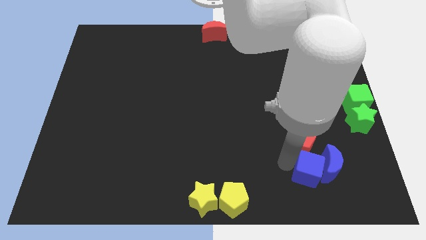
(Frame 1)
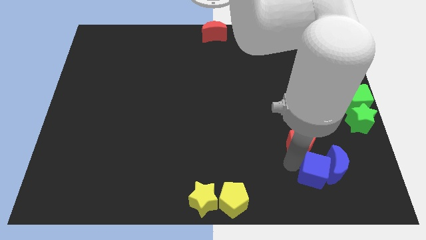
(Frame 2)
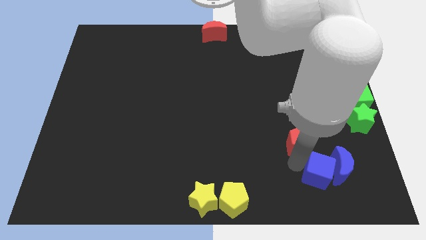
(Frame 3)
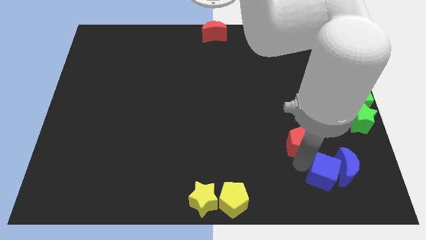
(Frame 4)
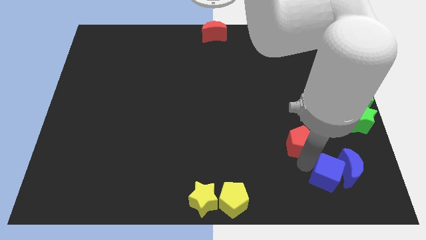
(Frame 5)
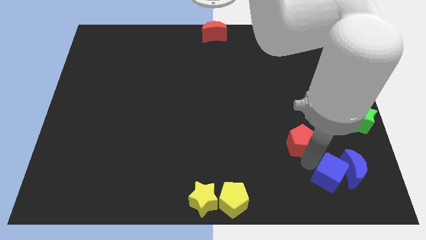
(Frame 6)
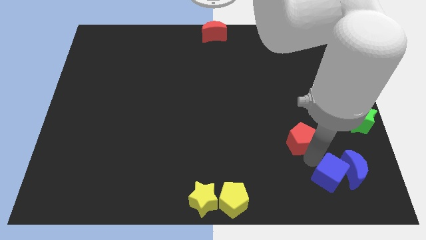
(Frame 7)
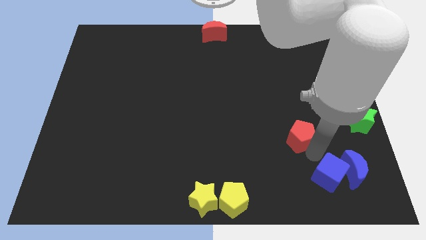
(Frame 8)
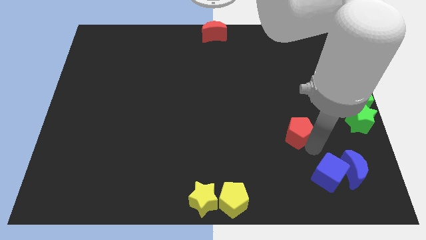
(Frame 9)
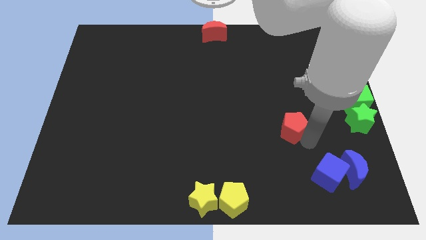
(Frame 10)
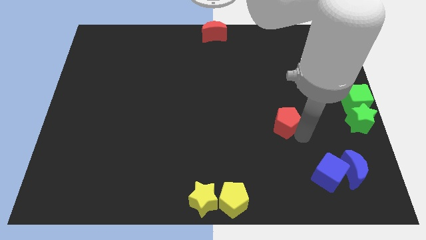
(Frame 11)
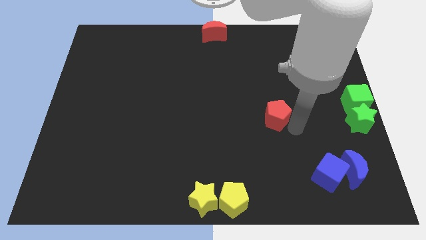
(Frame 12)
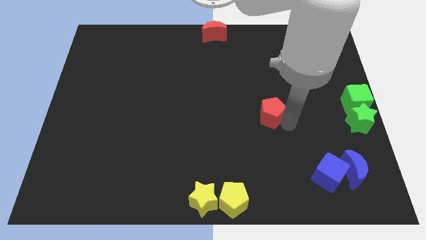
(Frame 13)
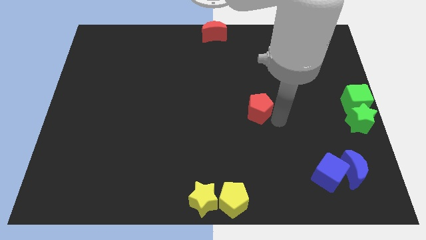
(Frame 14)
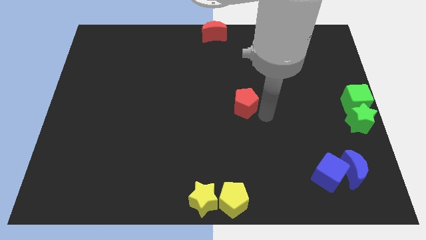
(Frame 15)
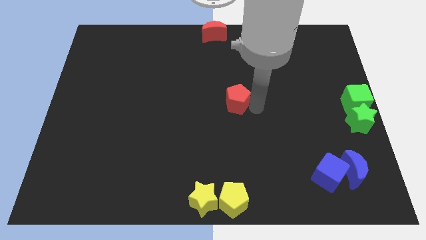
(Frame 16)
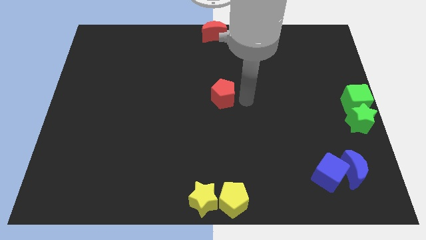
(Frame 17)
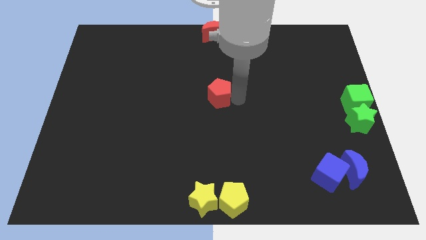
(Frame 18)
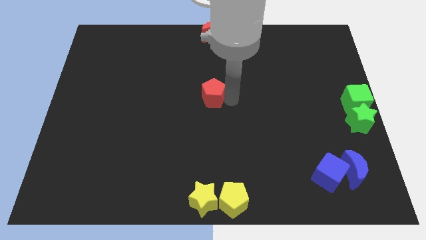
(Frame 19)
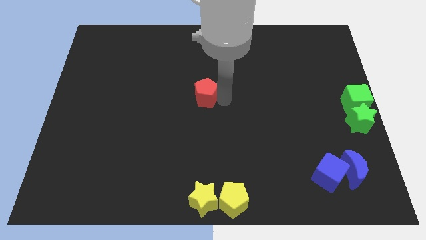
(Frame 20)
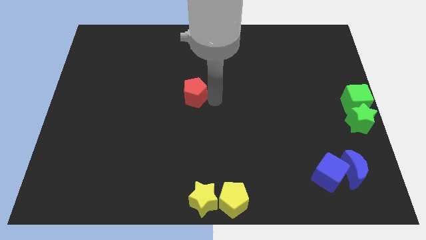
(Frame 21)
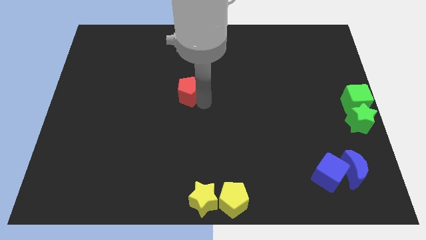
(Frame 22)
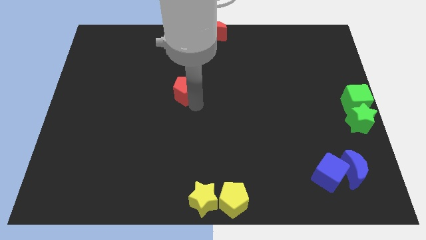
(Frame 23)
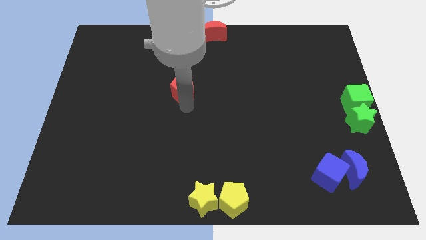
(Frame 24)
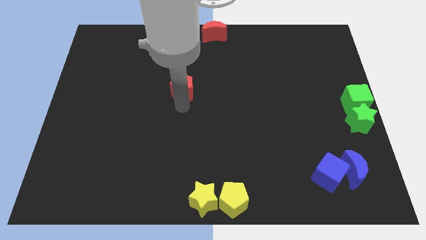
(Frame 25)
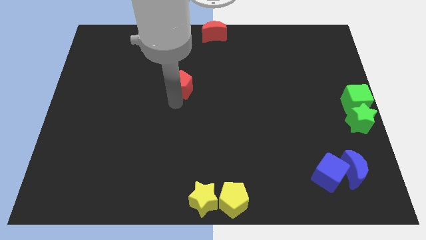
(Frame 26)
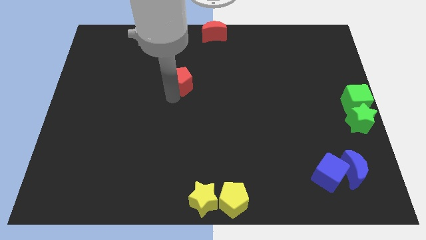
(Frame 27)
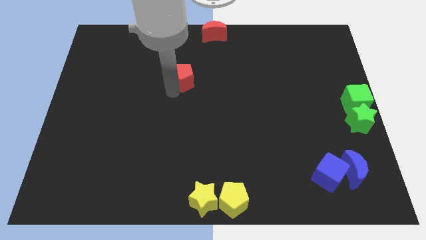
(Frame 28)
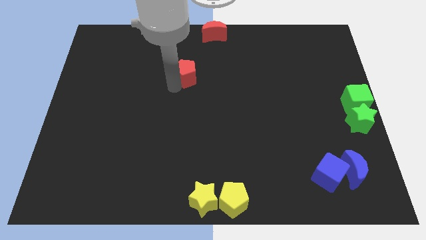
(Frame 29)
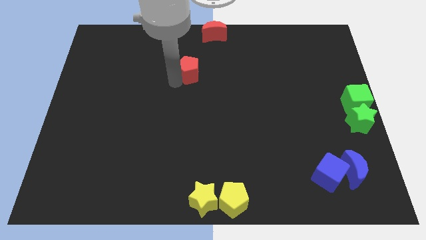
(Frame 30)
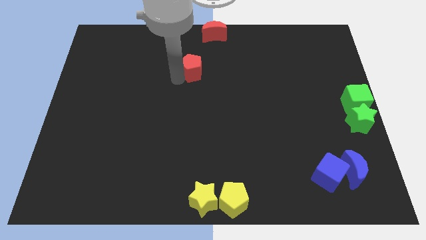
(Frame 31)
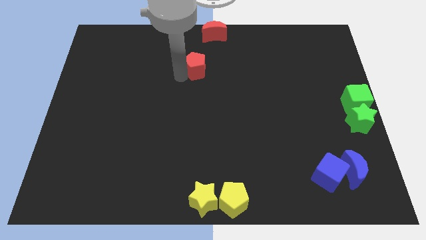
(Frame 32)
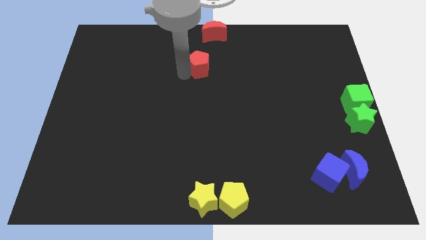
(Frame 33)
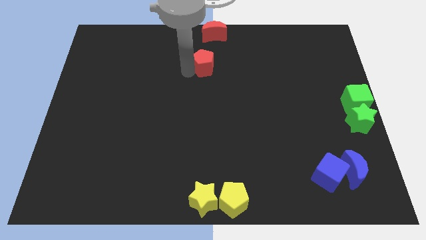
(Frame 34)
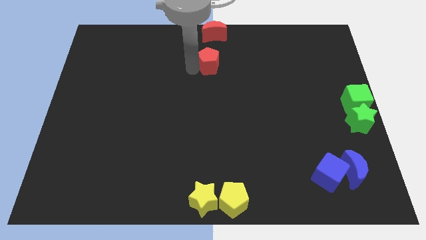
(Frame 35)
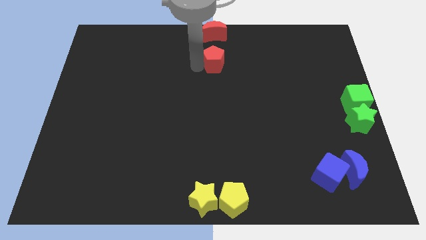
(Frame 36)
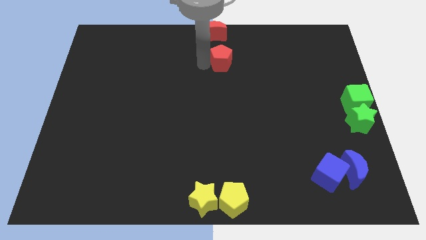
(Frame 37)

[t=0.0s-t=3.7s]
place the red pentagon below the red moon

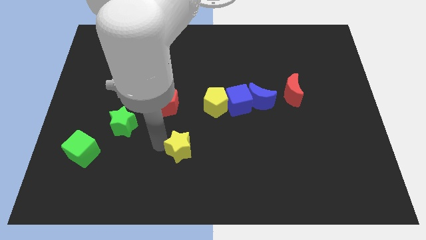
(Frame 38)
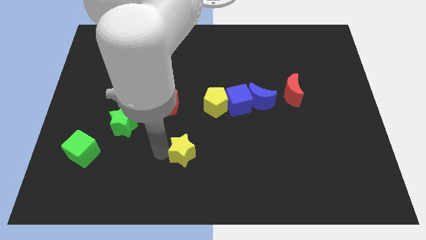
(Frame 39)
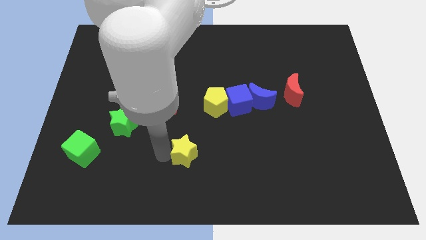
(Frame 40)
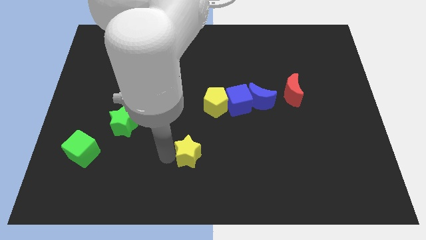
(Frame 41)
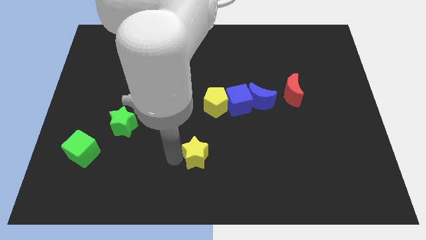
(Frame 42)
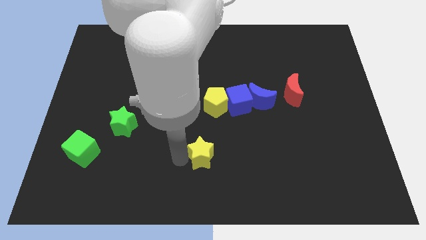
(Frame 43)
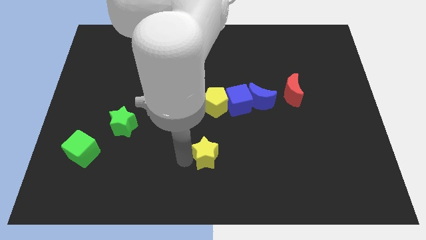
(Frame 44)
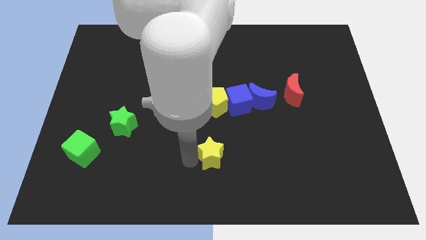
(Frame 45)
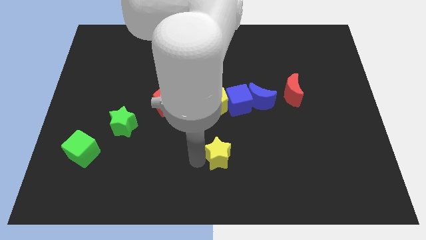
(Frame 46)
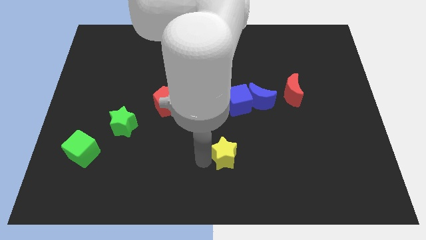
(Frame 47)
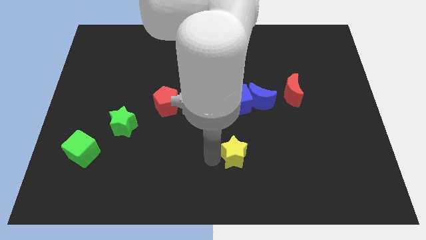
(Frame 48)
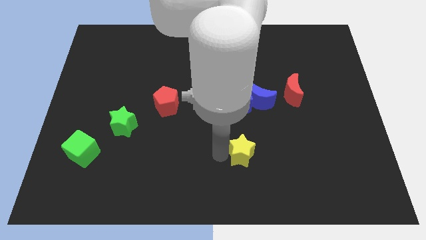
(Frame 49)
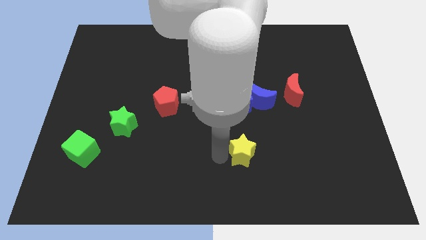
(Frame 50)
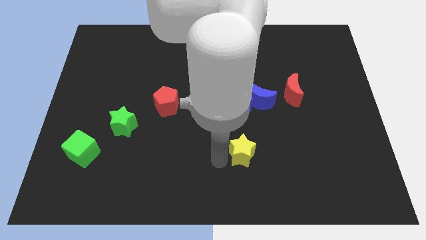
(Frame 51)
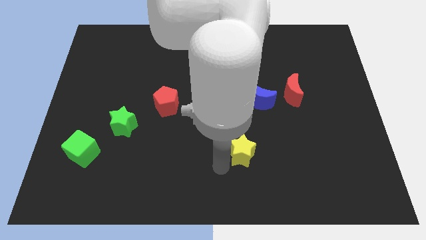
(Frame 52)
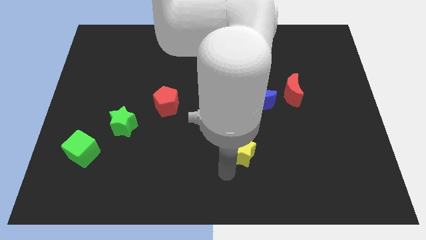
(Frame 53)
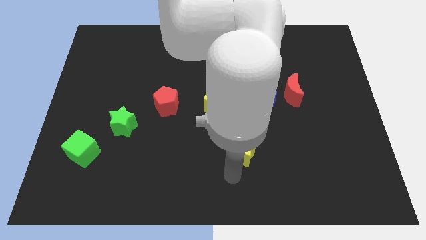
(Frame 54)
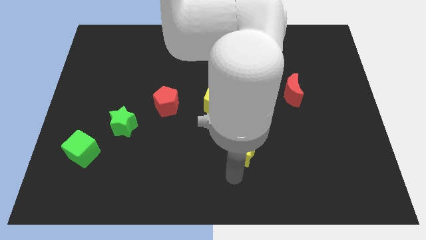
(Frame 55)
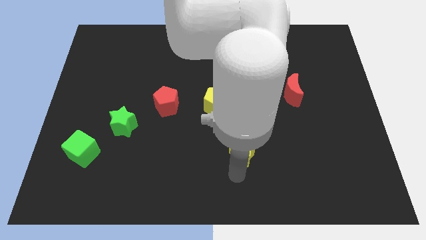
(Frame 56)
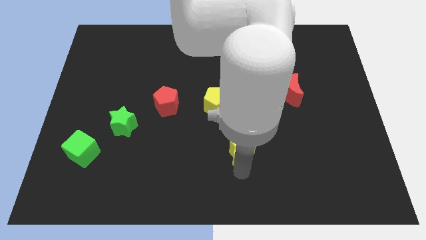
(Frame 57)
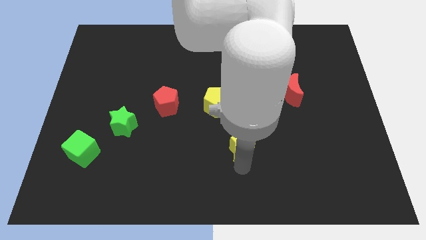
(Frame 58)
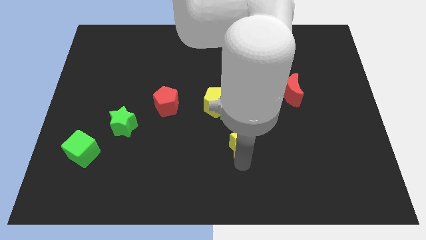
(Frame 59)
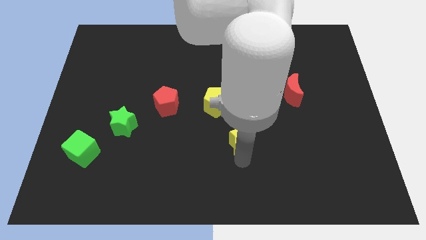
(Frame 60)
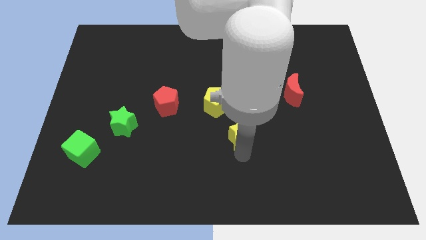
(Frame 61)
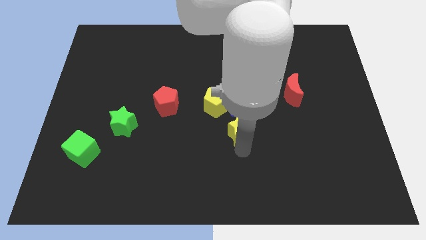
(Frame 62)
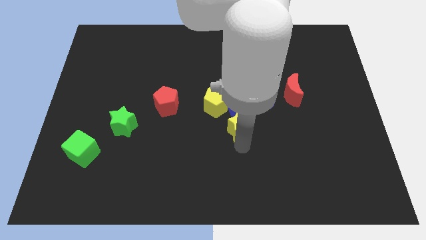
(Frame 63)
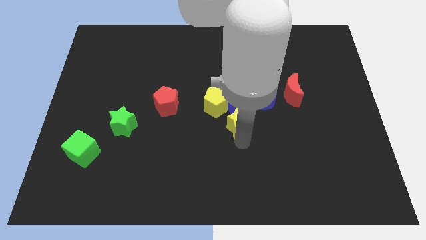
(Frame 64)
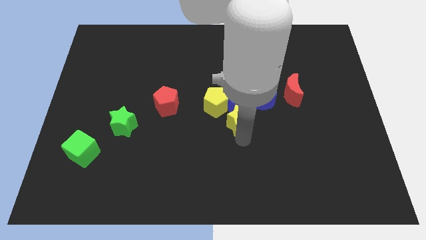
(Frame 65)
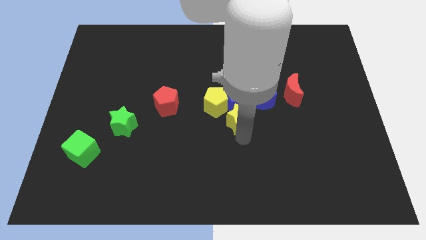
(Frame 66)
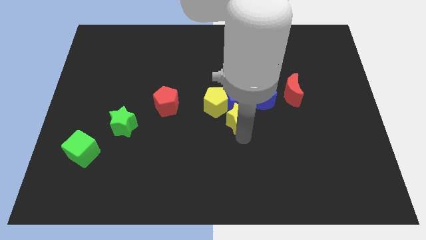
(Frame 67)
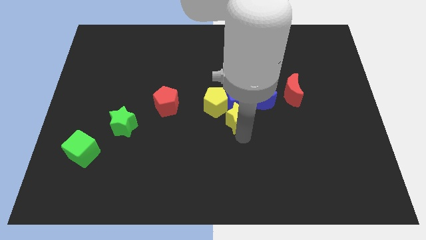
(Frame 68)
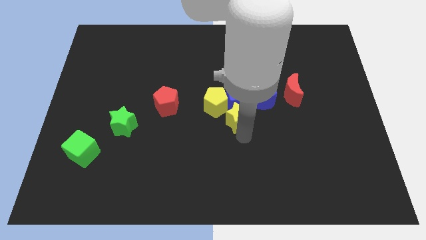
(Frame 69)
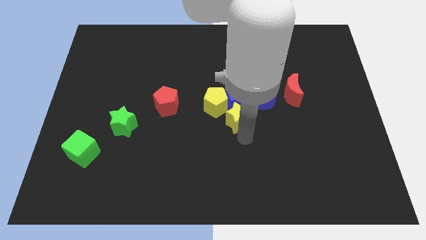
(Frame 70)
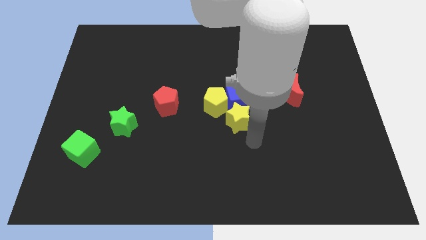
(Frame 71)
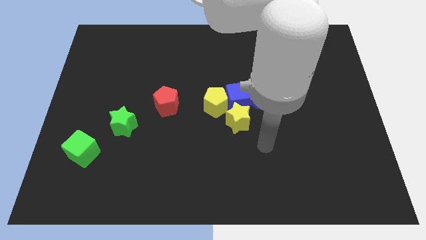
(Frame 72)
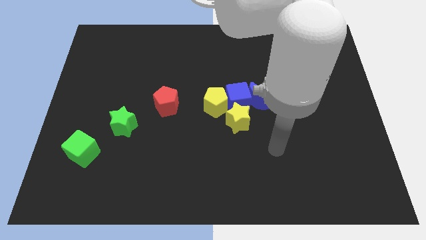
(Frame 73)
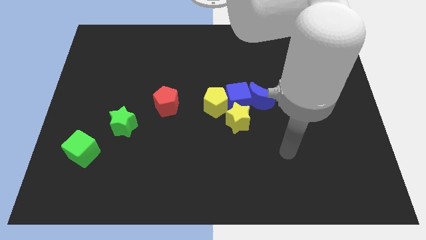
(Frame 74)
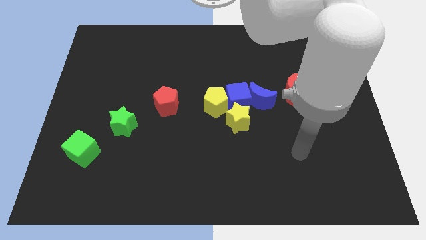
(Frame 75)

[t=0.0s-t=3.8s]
place the yellow pentagon below the blue cube

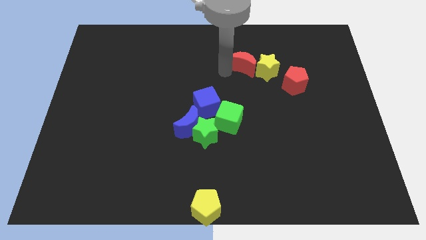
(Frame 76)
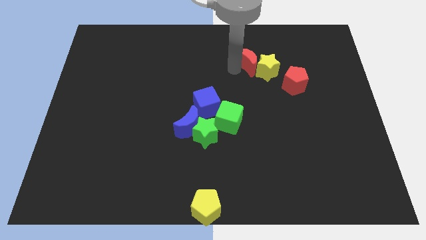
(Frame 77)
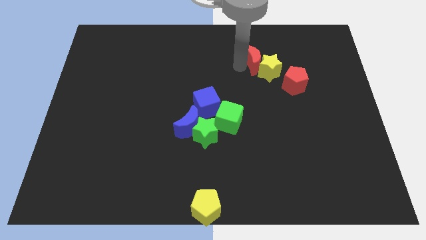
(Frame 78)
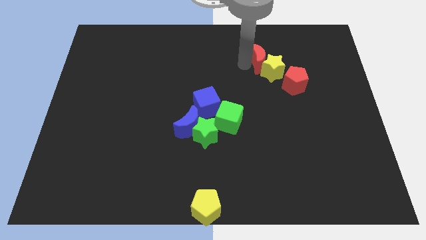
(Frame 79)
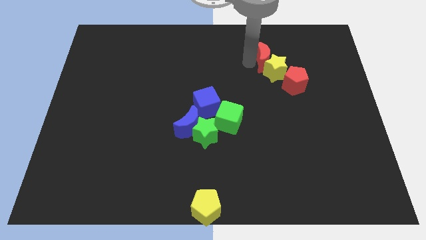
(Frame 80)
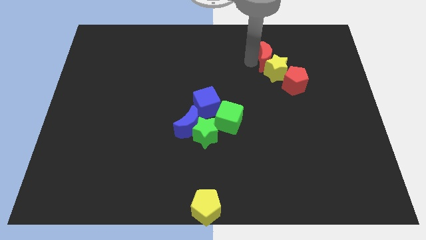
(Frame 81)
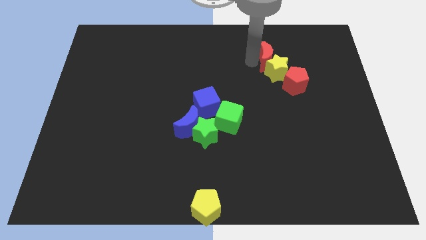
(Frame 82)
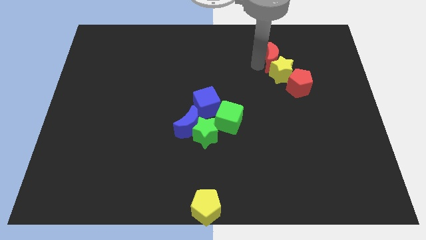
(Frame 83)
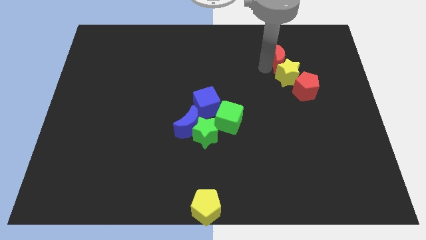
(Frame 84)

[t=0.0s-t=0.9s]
move the red moon slightly towards right center of the board

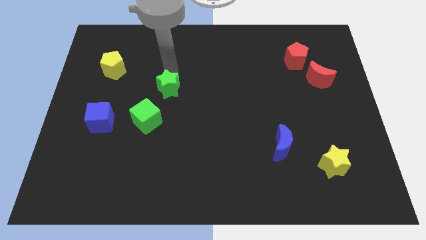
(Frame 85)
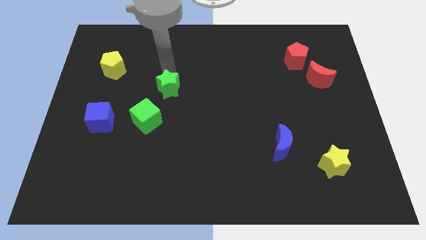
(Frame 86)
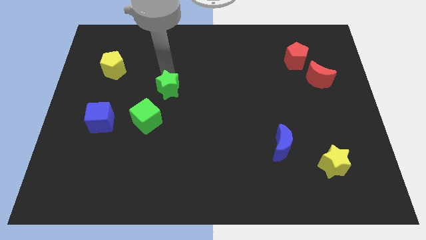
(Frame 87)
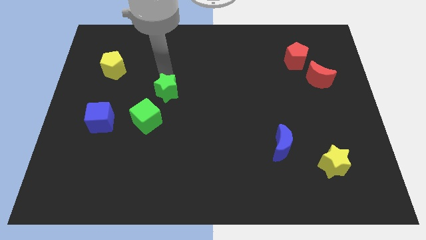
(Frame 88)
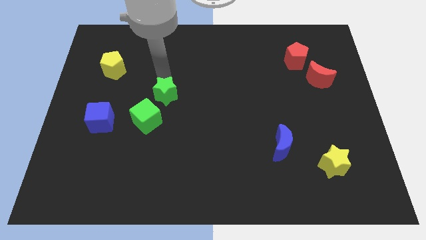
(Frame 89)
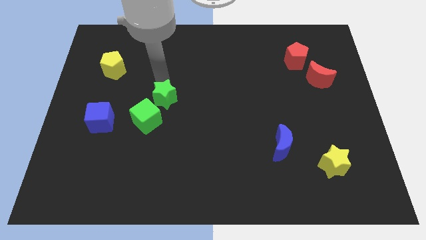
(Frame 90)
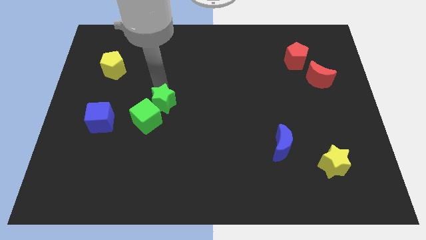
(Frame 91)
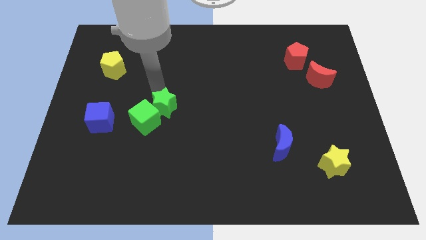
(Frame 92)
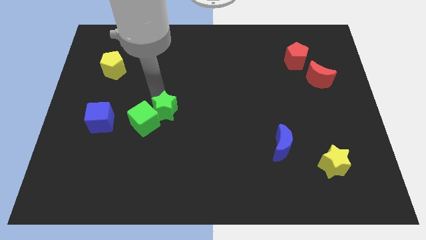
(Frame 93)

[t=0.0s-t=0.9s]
push the green star into the green cube
